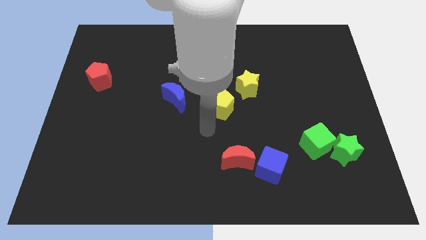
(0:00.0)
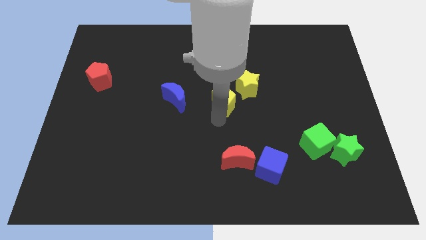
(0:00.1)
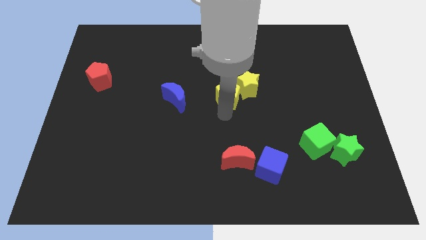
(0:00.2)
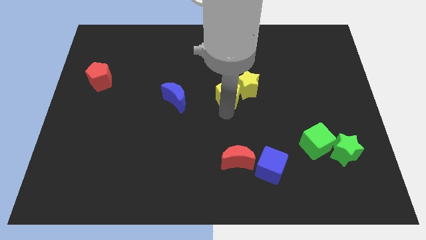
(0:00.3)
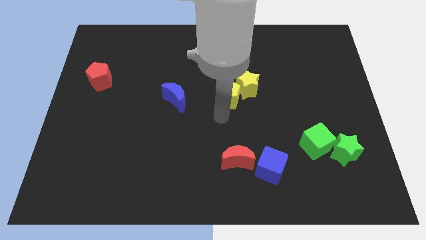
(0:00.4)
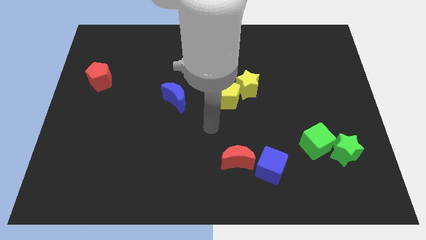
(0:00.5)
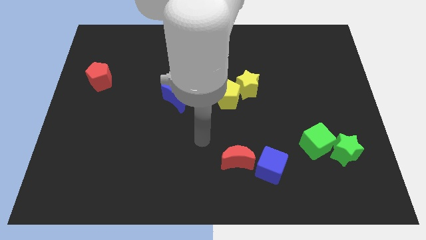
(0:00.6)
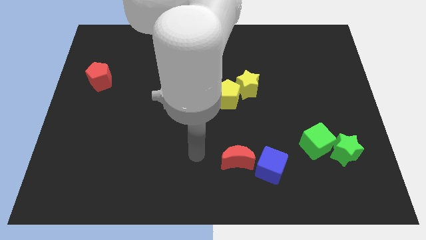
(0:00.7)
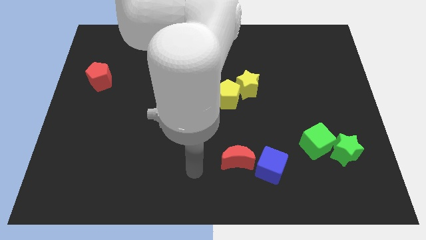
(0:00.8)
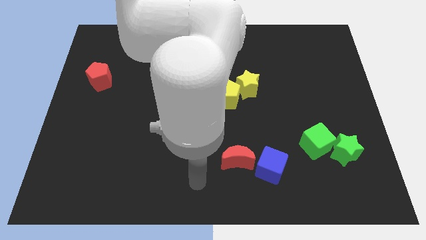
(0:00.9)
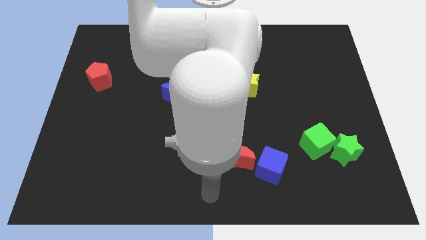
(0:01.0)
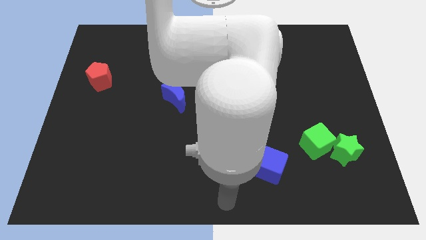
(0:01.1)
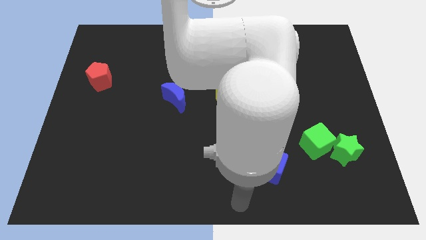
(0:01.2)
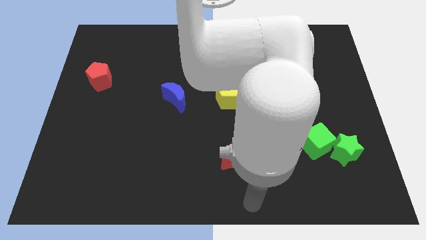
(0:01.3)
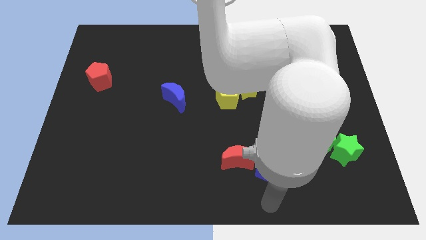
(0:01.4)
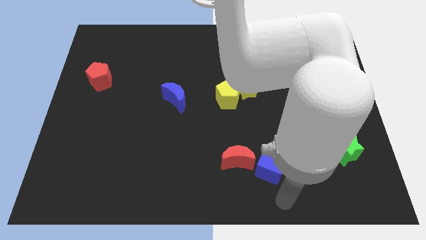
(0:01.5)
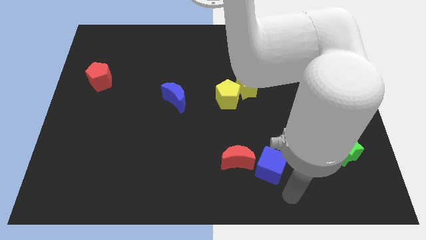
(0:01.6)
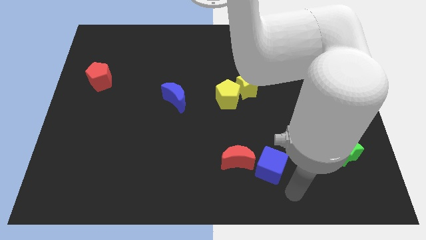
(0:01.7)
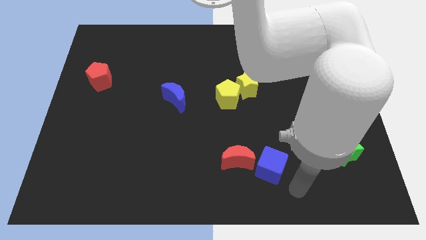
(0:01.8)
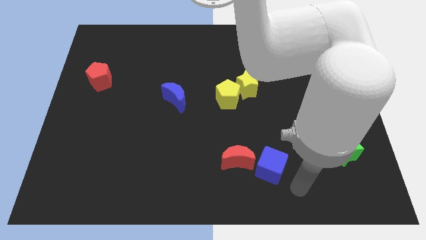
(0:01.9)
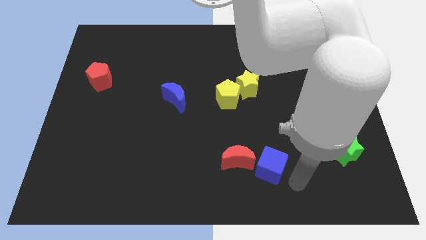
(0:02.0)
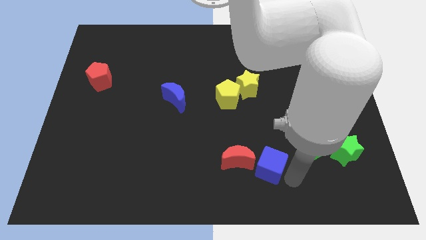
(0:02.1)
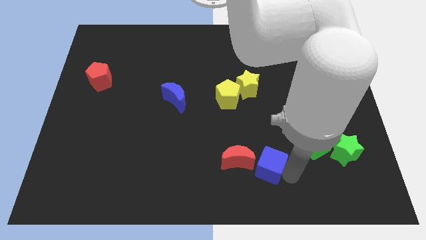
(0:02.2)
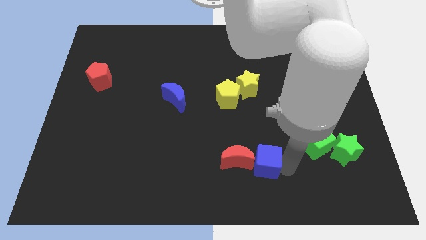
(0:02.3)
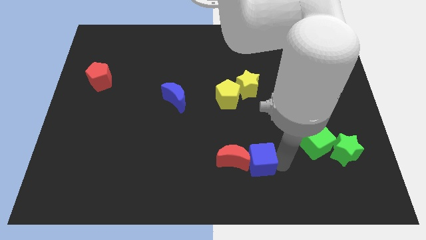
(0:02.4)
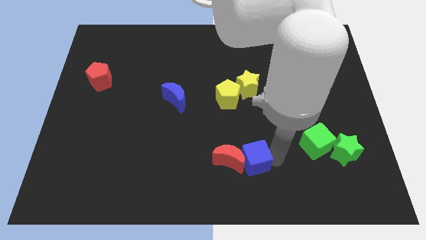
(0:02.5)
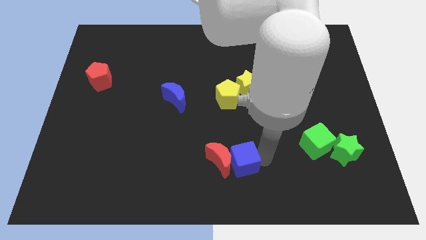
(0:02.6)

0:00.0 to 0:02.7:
push the blue cube into red crescent

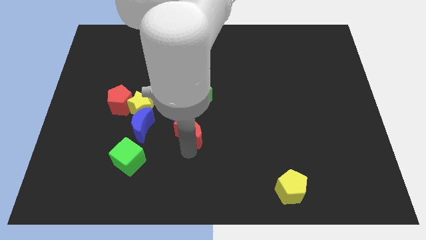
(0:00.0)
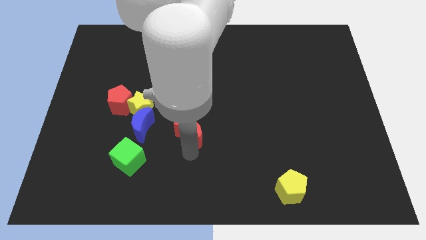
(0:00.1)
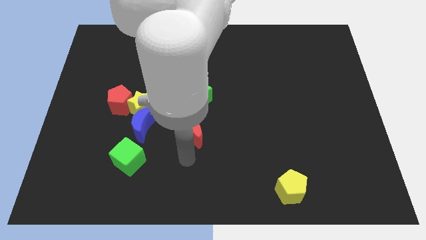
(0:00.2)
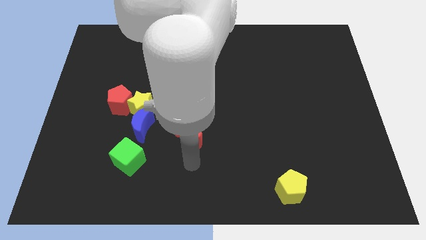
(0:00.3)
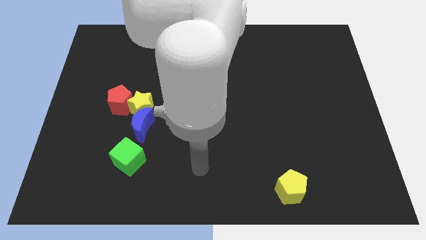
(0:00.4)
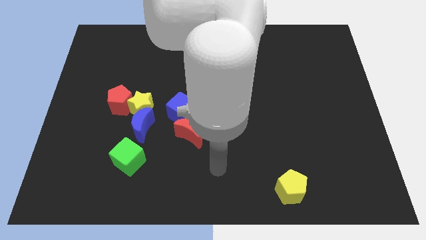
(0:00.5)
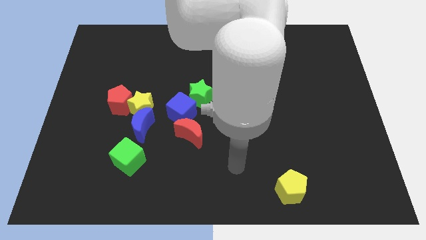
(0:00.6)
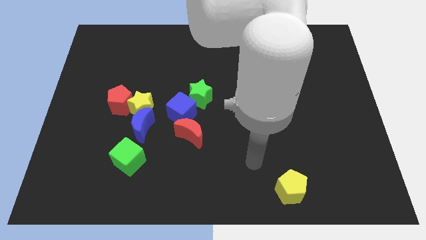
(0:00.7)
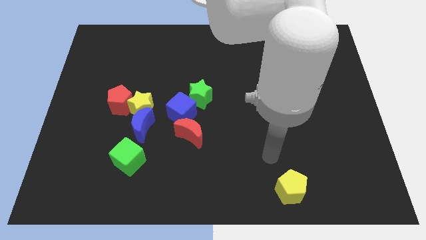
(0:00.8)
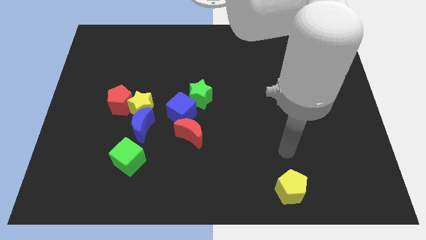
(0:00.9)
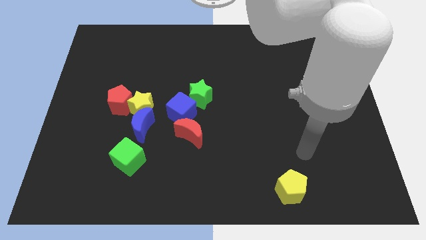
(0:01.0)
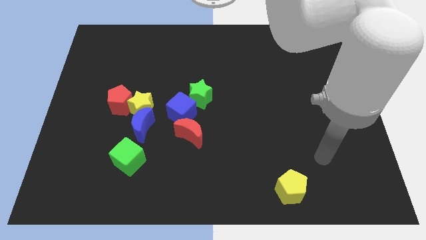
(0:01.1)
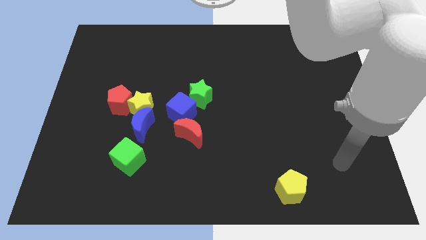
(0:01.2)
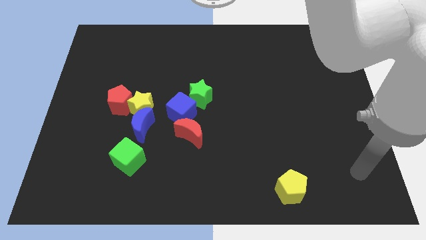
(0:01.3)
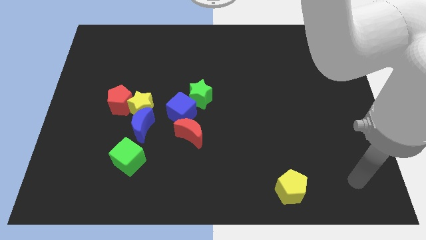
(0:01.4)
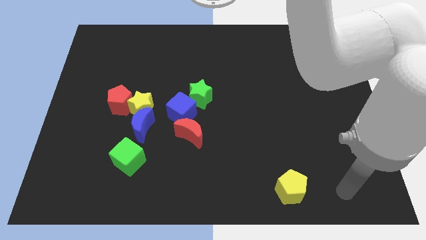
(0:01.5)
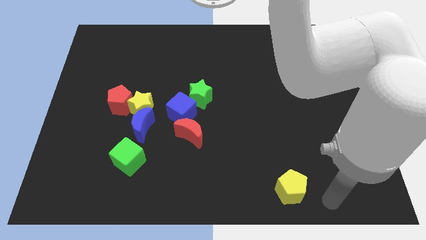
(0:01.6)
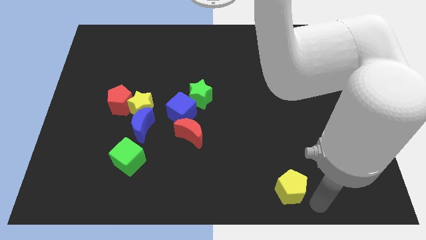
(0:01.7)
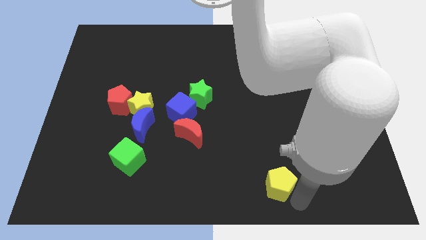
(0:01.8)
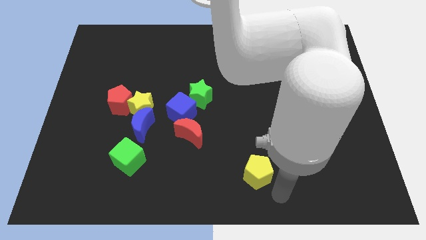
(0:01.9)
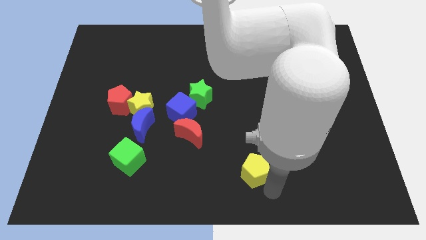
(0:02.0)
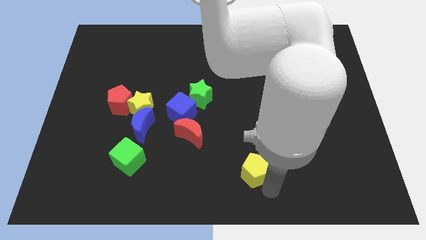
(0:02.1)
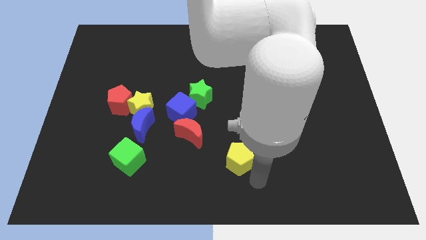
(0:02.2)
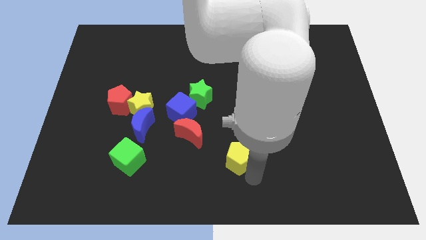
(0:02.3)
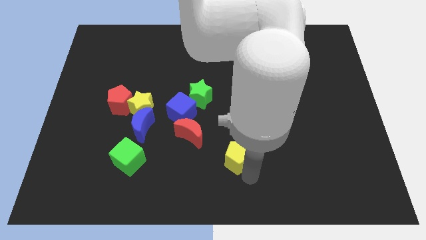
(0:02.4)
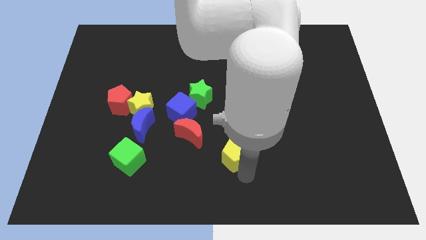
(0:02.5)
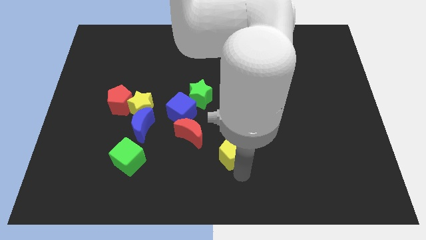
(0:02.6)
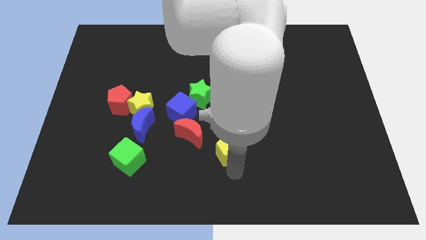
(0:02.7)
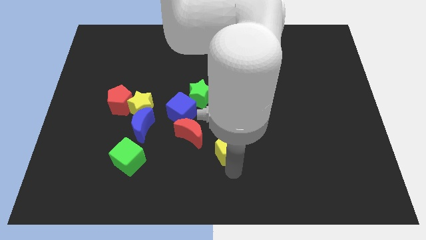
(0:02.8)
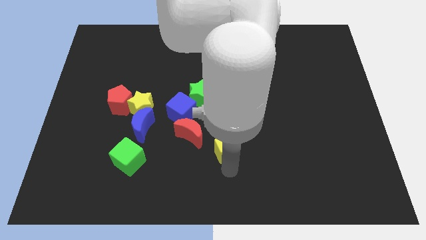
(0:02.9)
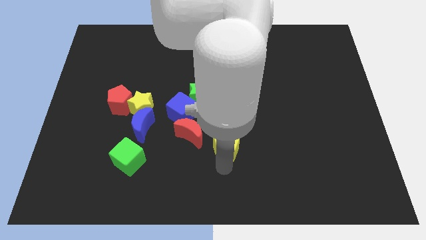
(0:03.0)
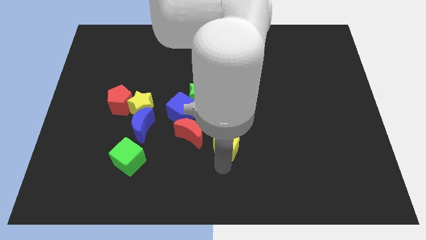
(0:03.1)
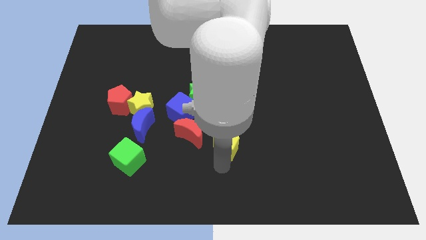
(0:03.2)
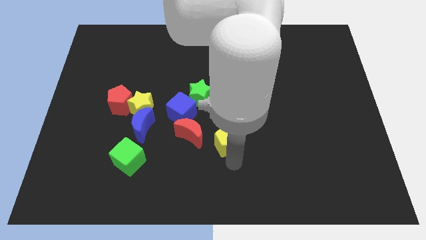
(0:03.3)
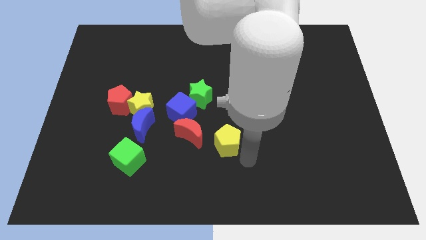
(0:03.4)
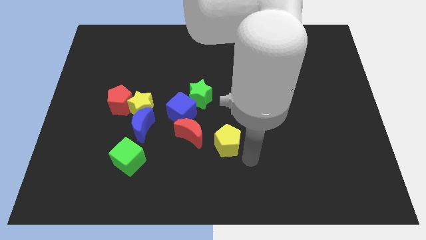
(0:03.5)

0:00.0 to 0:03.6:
drag yellow pentagon towards the right of the red crescent

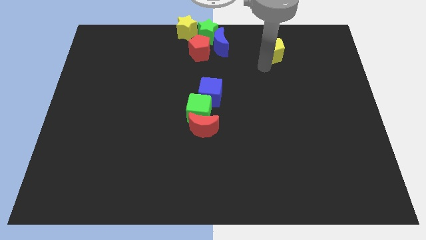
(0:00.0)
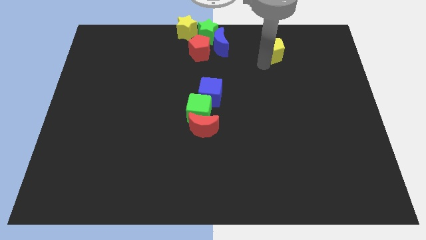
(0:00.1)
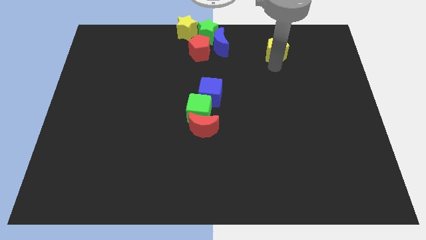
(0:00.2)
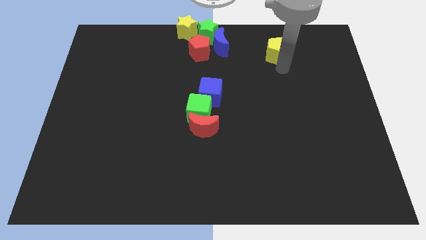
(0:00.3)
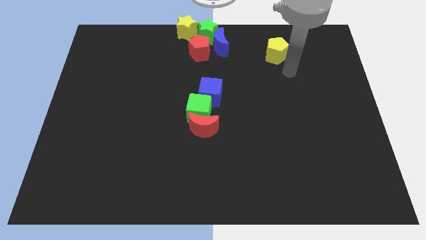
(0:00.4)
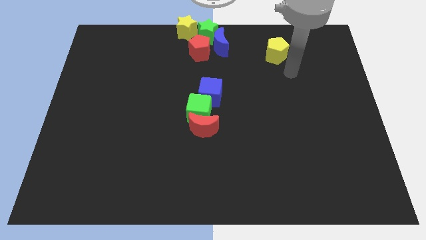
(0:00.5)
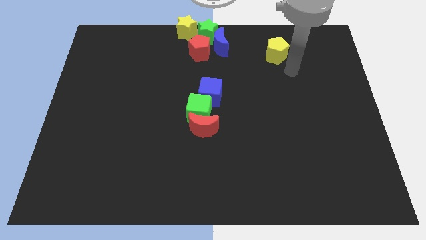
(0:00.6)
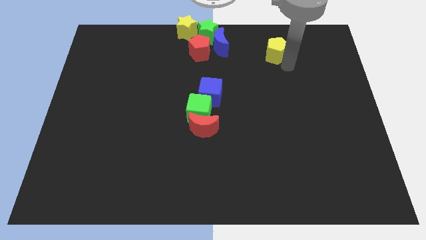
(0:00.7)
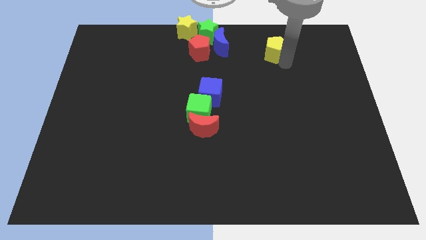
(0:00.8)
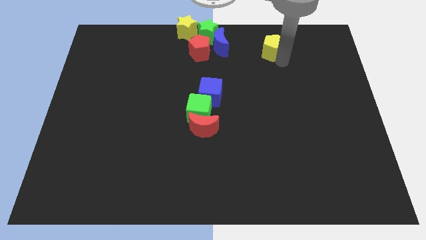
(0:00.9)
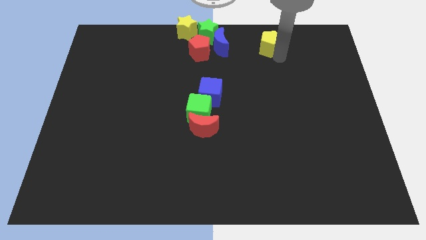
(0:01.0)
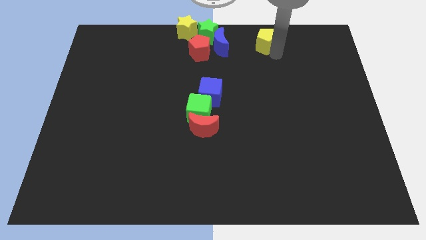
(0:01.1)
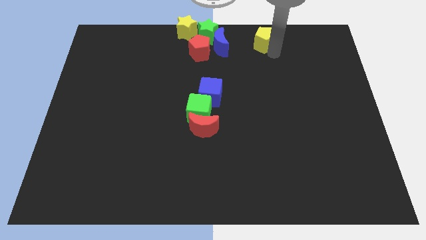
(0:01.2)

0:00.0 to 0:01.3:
move the yellow pentagon horizontal to the blue crescent

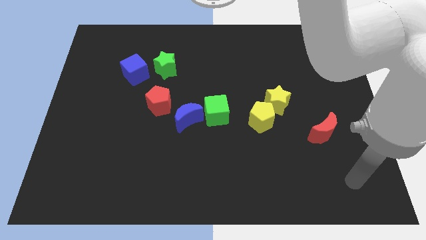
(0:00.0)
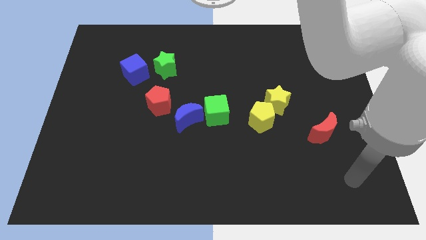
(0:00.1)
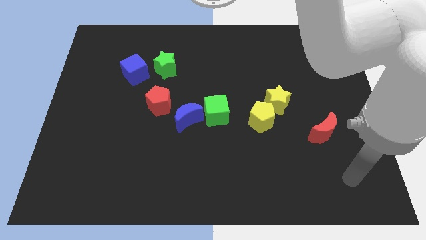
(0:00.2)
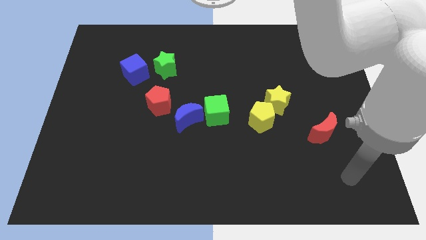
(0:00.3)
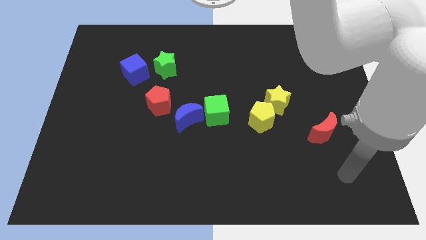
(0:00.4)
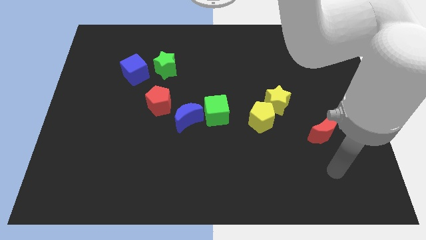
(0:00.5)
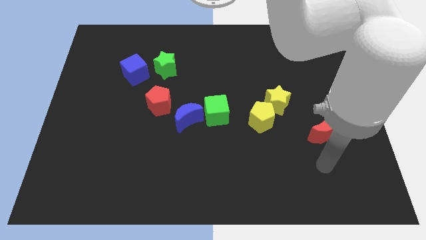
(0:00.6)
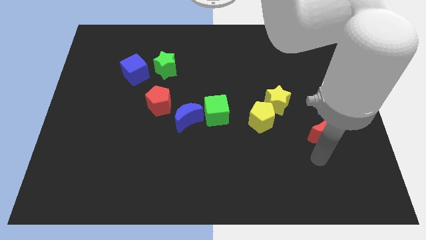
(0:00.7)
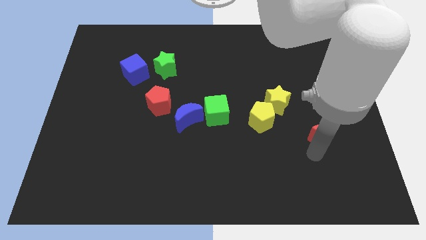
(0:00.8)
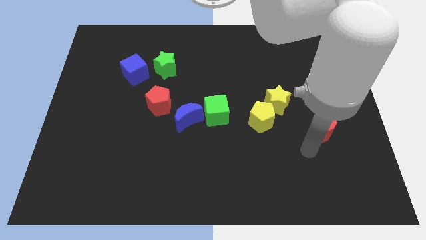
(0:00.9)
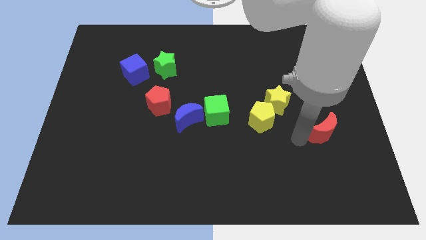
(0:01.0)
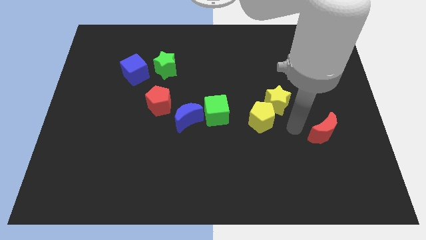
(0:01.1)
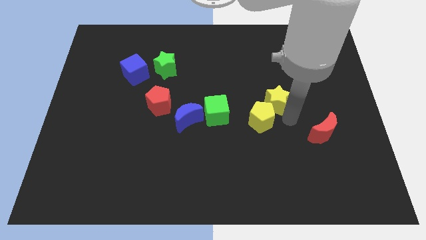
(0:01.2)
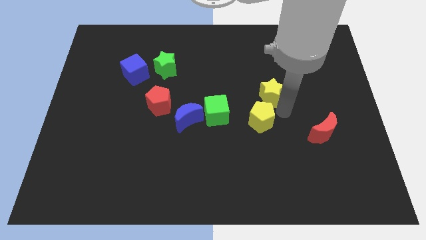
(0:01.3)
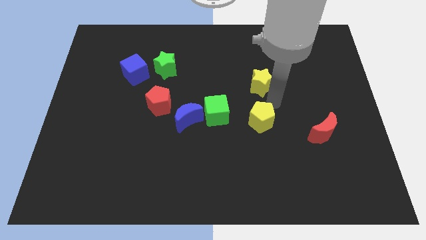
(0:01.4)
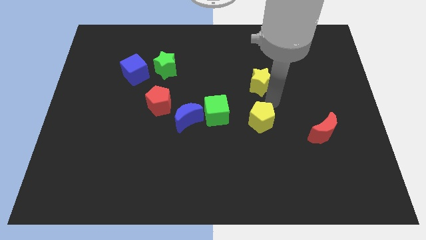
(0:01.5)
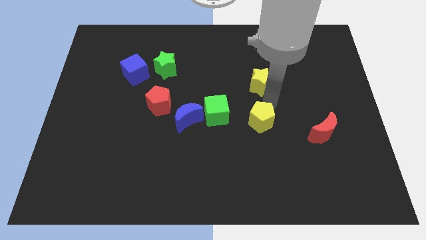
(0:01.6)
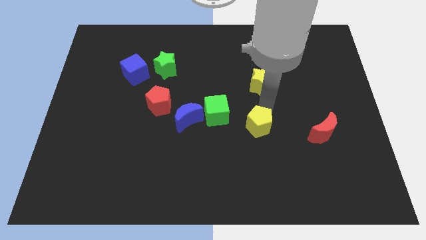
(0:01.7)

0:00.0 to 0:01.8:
go and separate the group of yellow blocks
